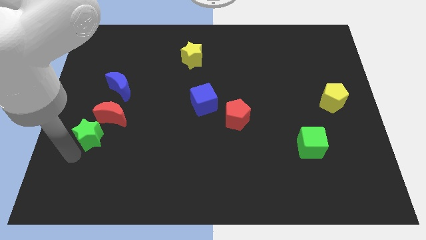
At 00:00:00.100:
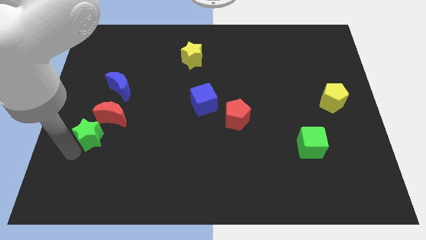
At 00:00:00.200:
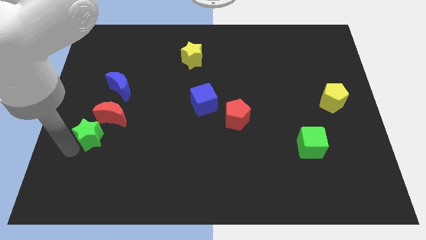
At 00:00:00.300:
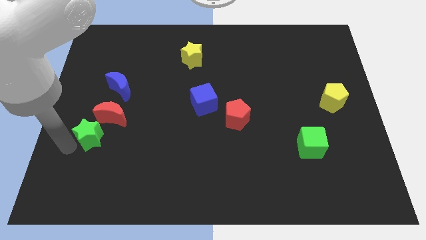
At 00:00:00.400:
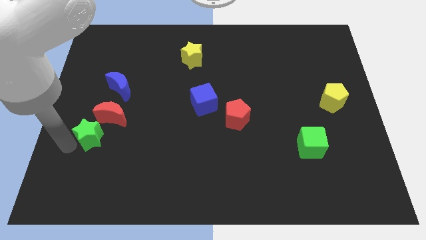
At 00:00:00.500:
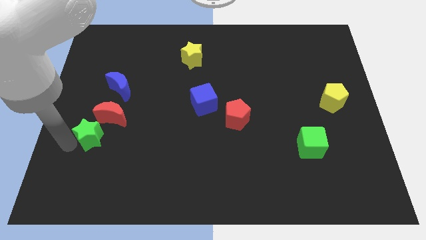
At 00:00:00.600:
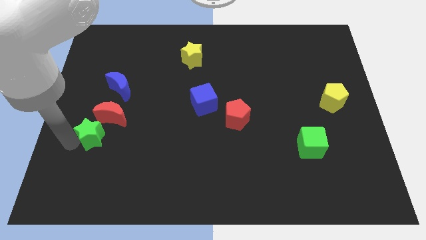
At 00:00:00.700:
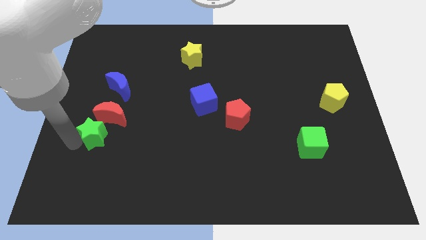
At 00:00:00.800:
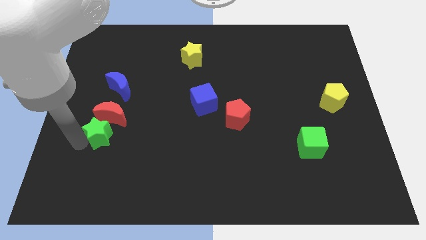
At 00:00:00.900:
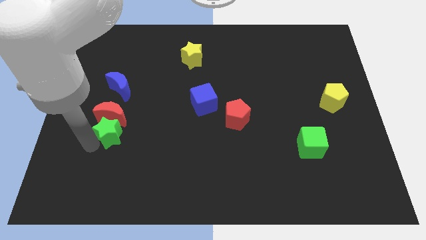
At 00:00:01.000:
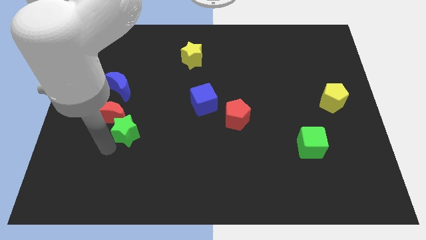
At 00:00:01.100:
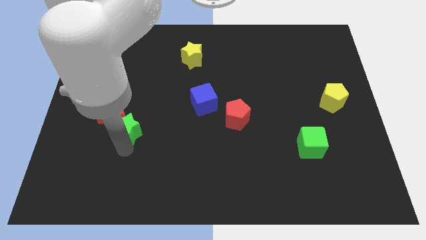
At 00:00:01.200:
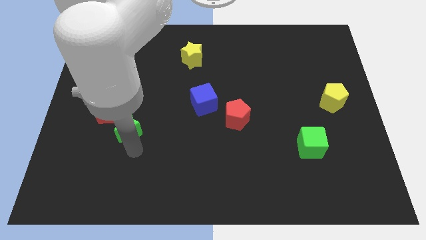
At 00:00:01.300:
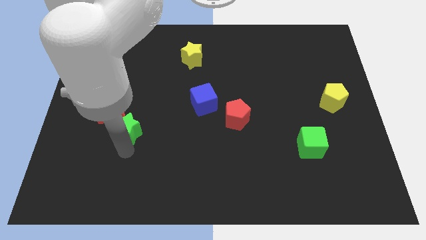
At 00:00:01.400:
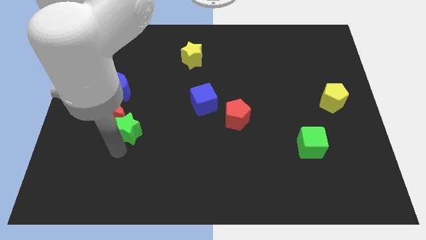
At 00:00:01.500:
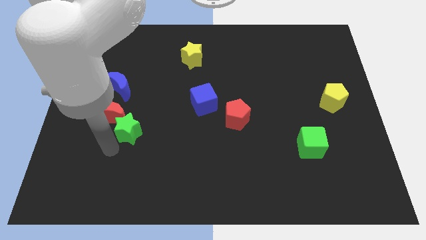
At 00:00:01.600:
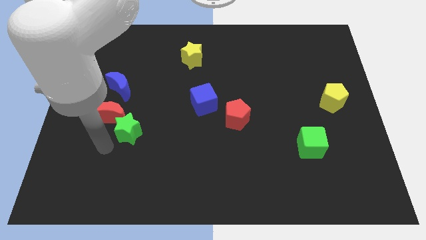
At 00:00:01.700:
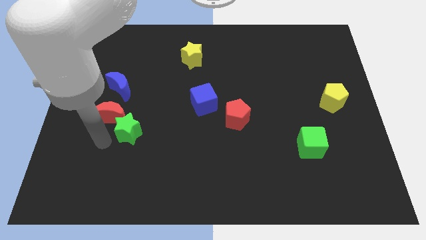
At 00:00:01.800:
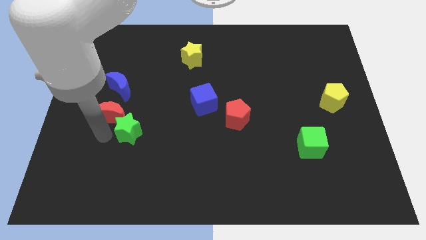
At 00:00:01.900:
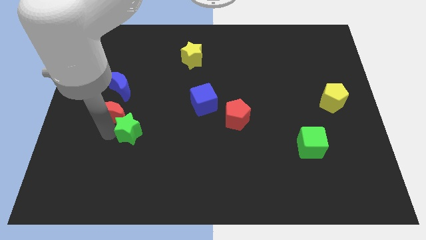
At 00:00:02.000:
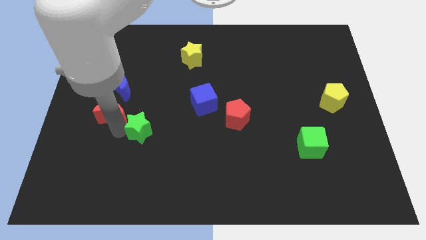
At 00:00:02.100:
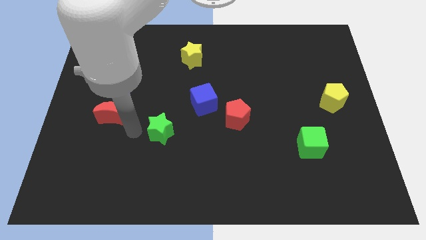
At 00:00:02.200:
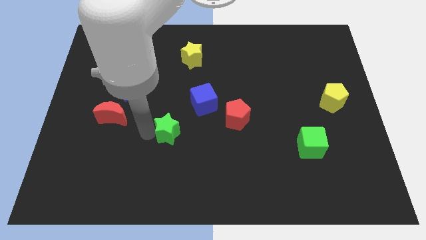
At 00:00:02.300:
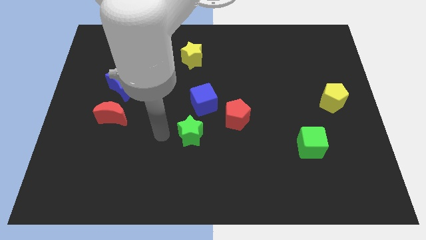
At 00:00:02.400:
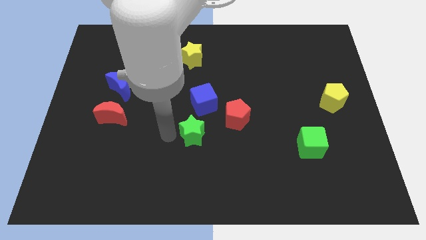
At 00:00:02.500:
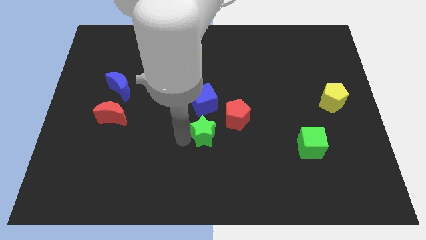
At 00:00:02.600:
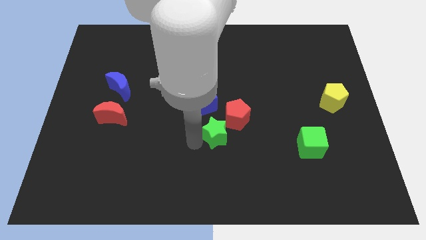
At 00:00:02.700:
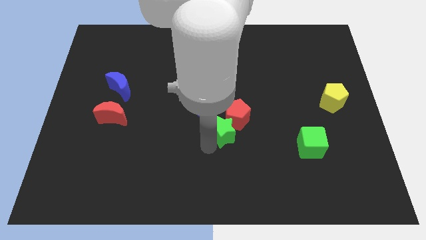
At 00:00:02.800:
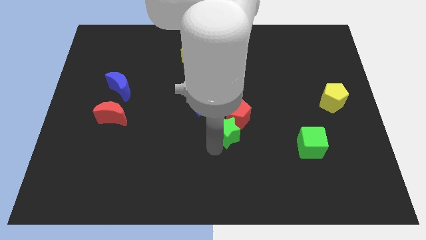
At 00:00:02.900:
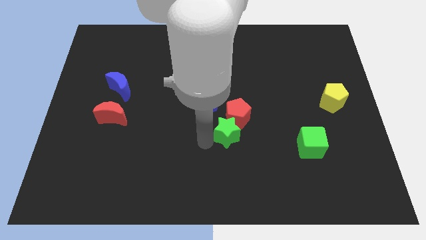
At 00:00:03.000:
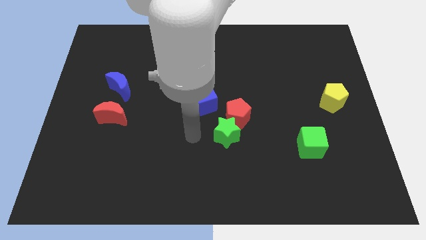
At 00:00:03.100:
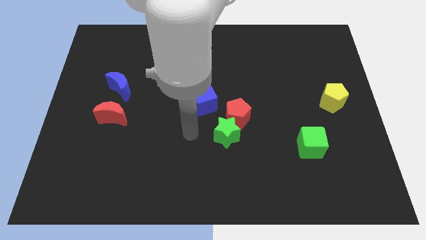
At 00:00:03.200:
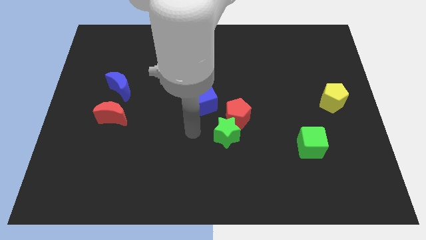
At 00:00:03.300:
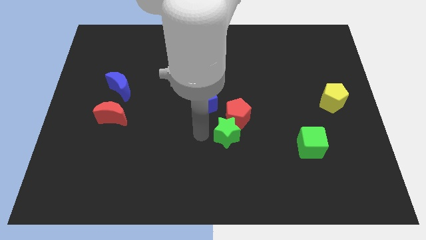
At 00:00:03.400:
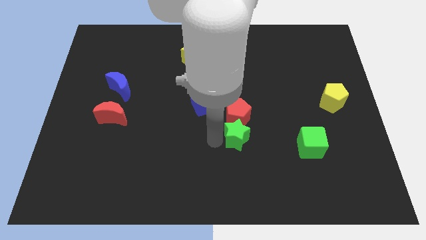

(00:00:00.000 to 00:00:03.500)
place the green star to the bottom side of the red pentagon

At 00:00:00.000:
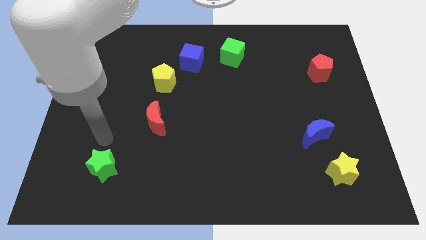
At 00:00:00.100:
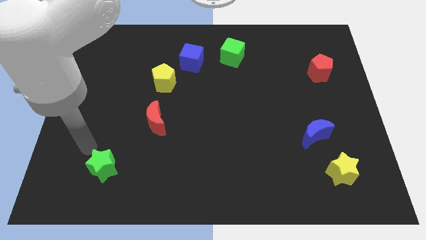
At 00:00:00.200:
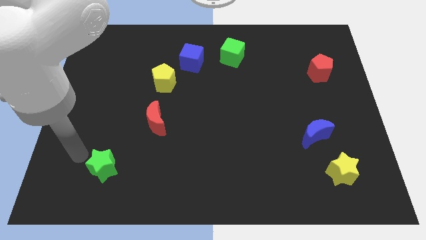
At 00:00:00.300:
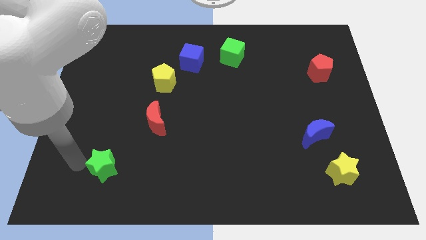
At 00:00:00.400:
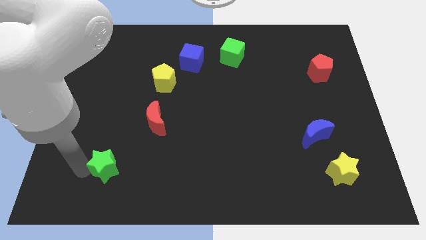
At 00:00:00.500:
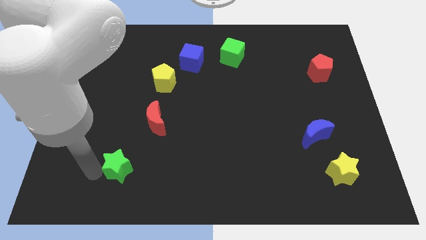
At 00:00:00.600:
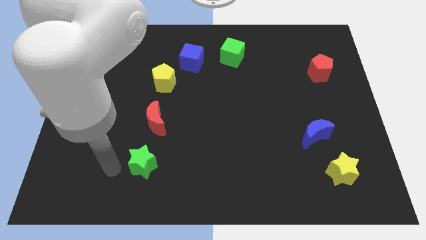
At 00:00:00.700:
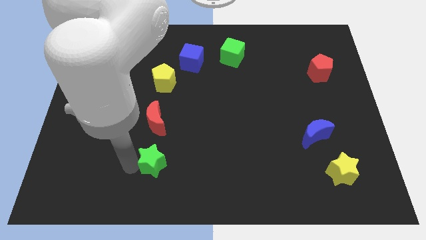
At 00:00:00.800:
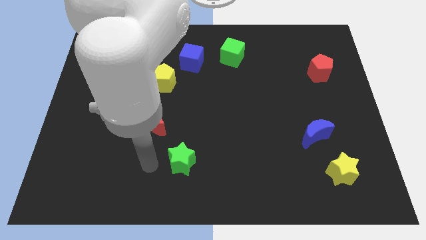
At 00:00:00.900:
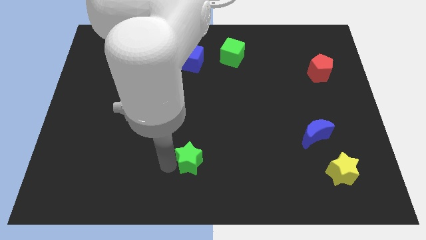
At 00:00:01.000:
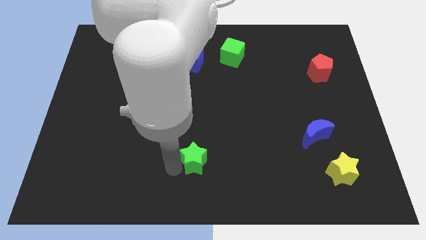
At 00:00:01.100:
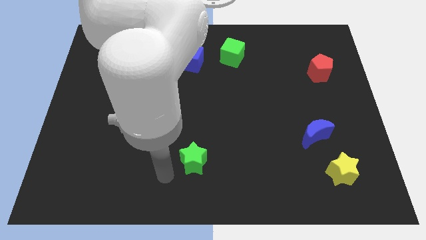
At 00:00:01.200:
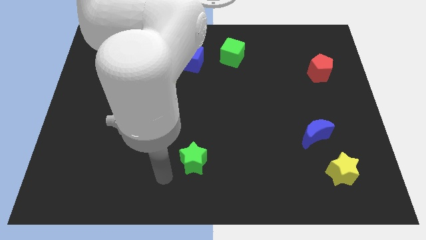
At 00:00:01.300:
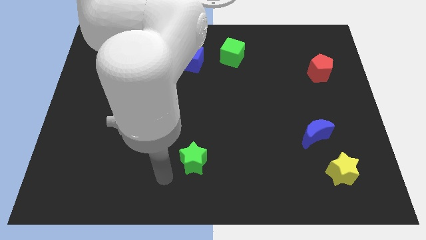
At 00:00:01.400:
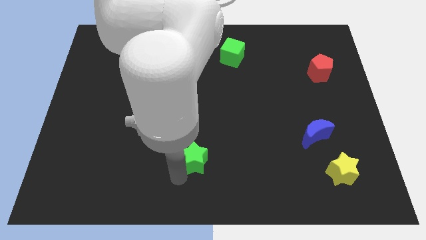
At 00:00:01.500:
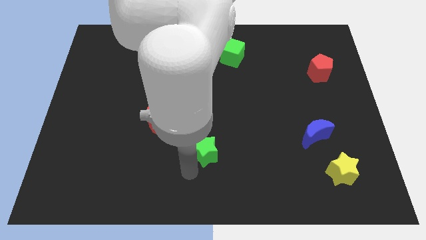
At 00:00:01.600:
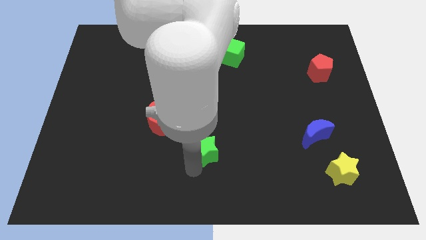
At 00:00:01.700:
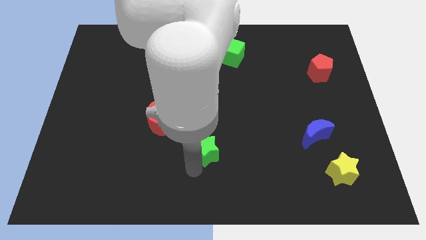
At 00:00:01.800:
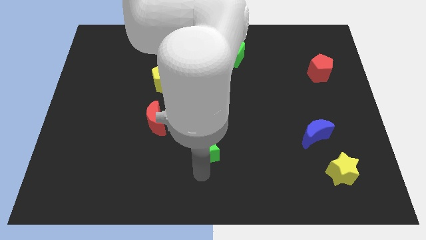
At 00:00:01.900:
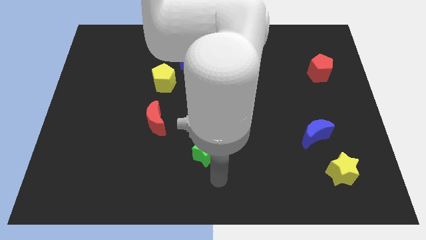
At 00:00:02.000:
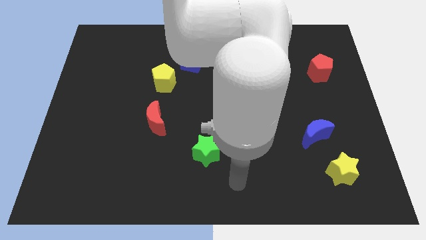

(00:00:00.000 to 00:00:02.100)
place the green star at the center of the board

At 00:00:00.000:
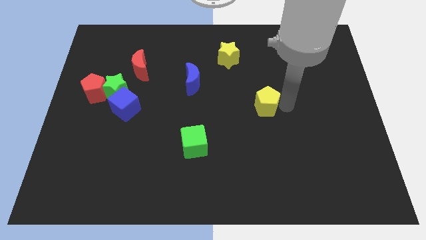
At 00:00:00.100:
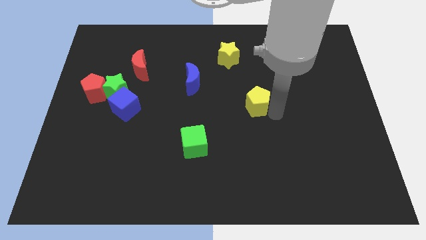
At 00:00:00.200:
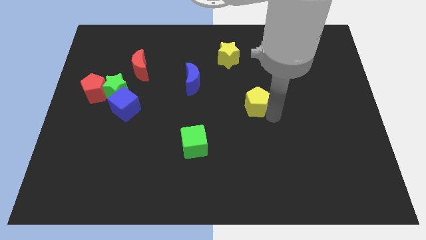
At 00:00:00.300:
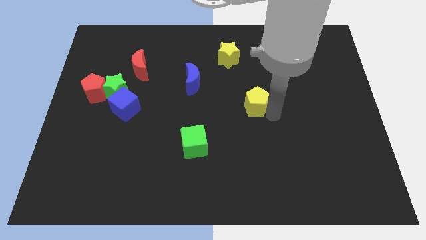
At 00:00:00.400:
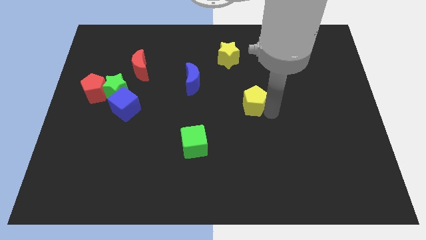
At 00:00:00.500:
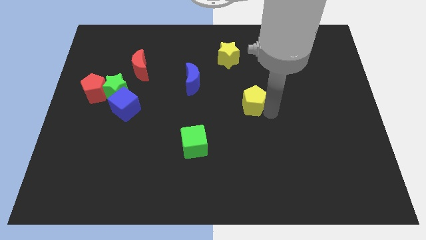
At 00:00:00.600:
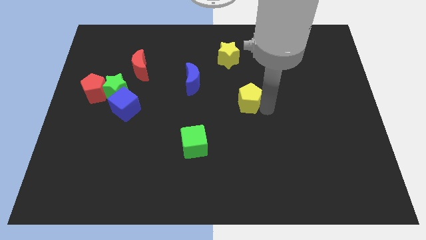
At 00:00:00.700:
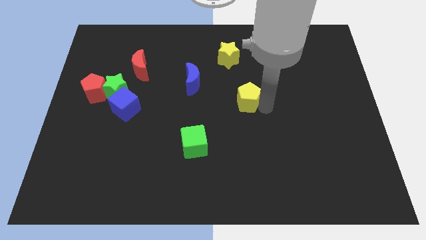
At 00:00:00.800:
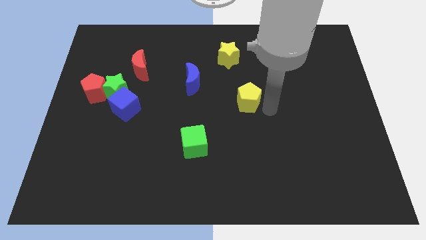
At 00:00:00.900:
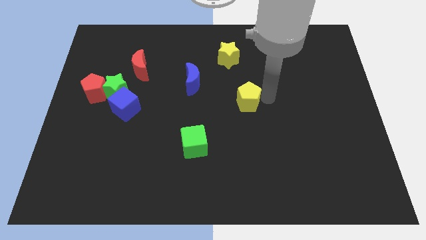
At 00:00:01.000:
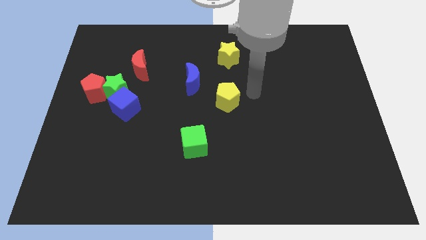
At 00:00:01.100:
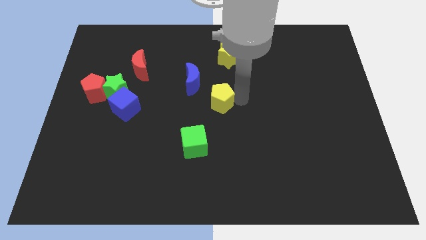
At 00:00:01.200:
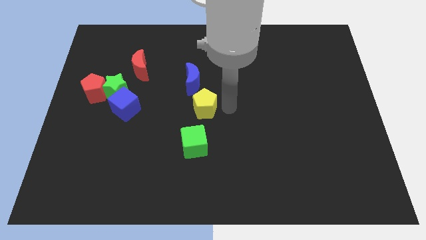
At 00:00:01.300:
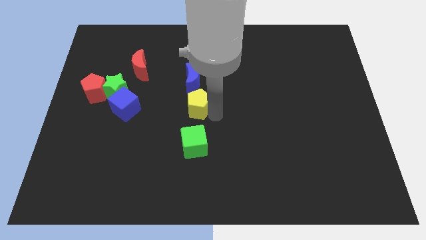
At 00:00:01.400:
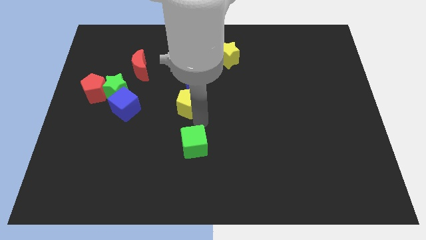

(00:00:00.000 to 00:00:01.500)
push yellow pentagon below blue crescent

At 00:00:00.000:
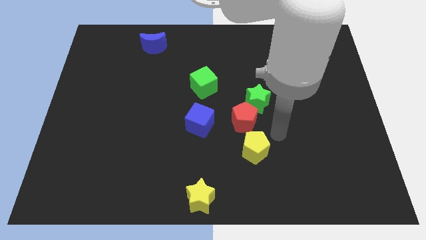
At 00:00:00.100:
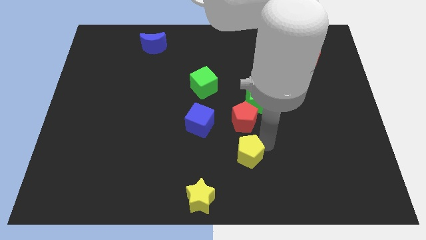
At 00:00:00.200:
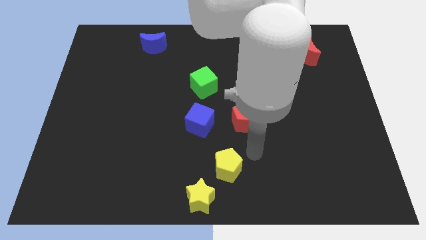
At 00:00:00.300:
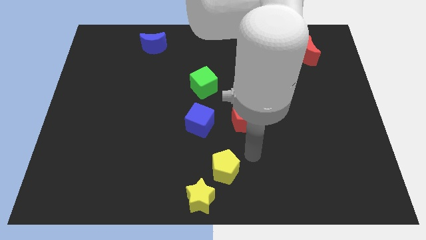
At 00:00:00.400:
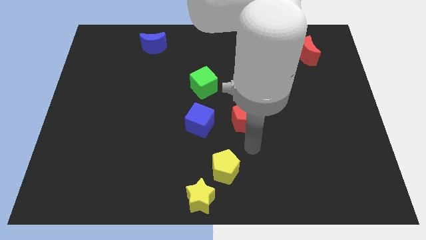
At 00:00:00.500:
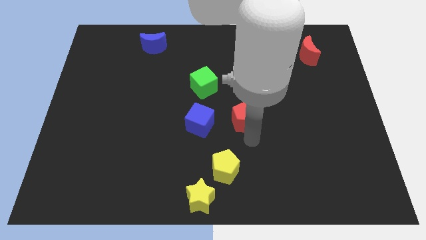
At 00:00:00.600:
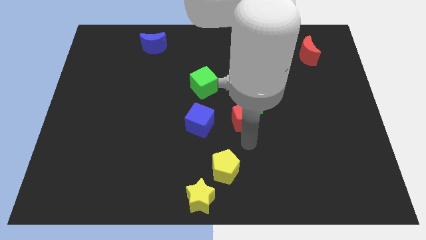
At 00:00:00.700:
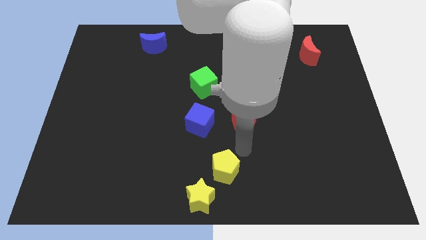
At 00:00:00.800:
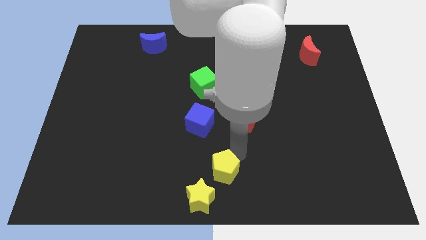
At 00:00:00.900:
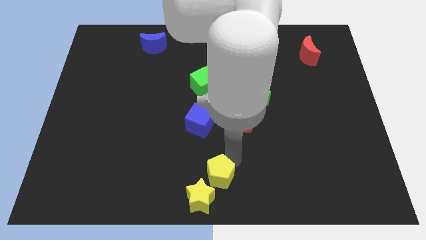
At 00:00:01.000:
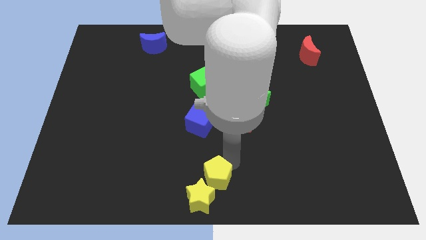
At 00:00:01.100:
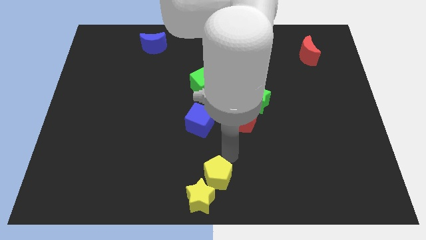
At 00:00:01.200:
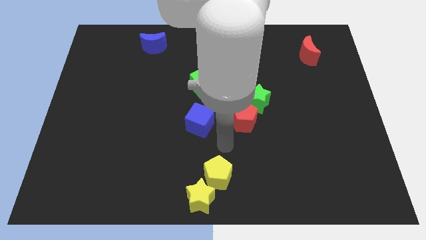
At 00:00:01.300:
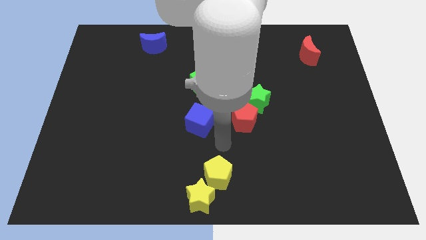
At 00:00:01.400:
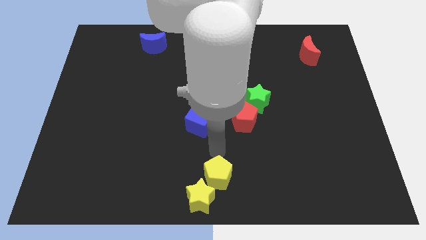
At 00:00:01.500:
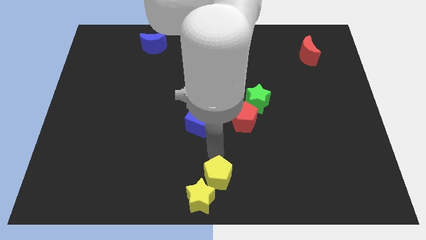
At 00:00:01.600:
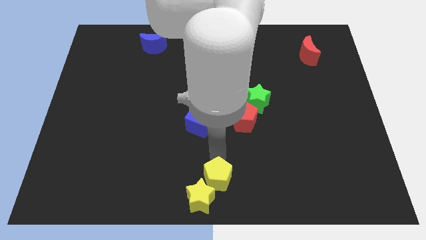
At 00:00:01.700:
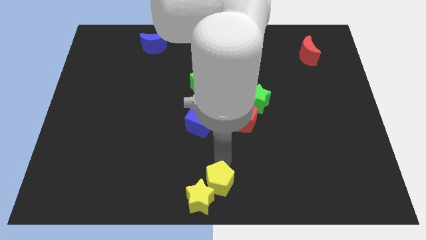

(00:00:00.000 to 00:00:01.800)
move the yellow pentagon towards the yellow star
